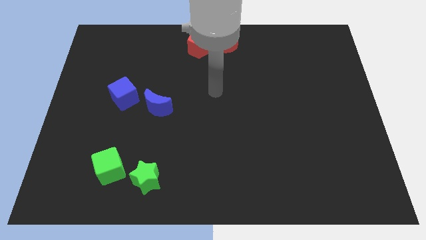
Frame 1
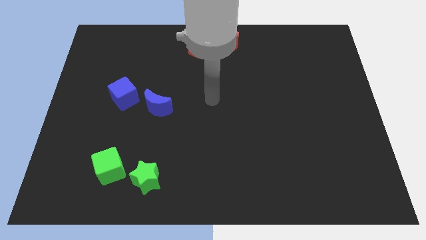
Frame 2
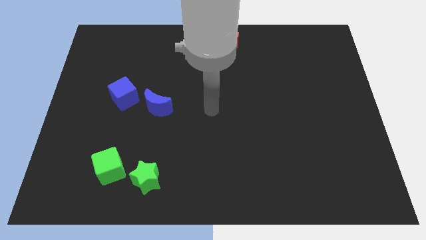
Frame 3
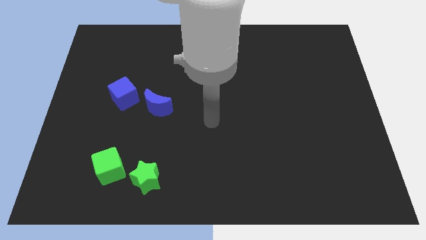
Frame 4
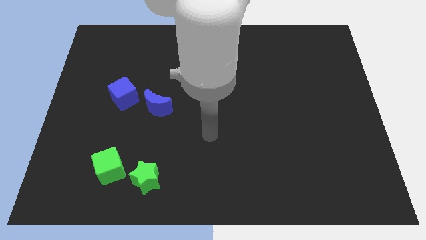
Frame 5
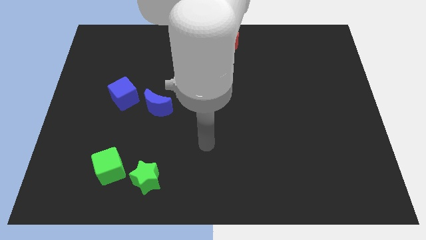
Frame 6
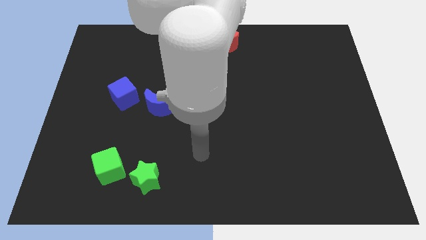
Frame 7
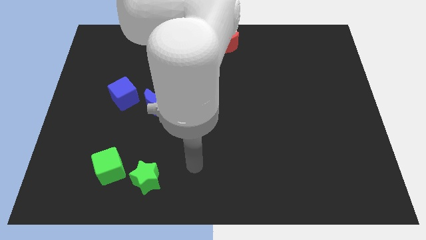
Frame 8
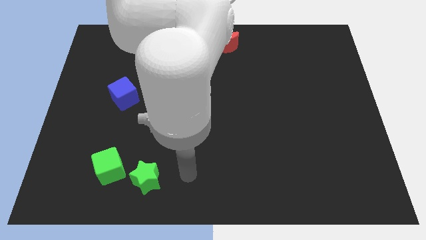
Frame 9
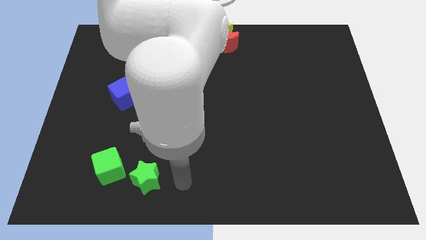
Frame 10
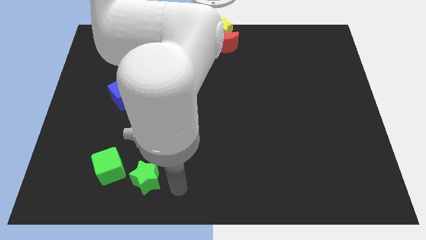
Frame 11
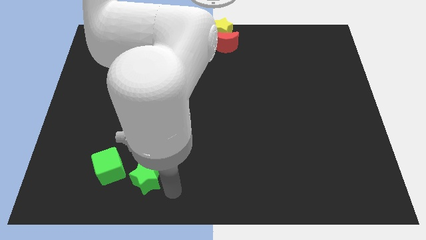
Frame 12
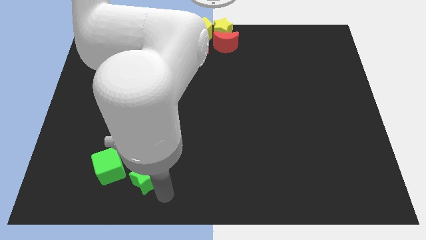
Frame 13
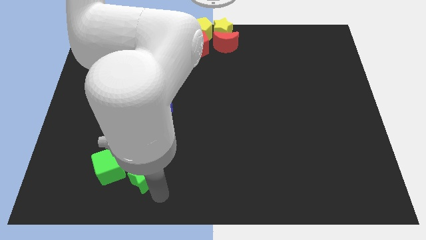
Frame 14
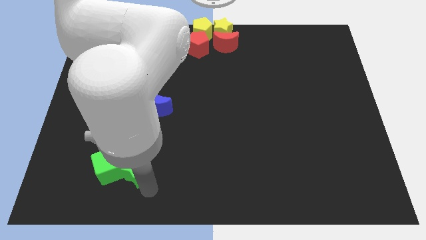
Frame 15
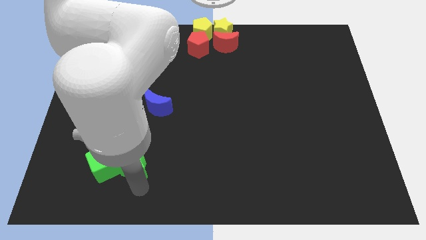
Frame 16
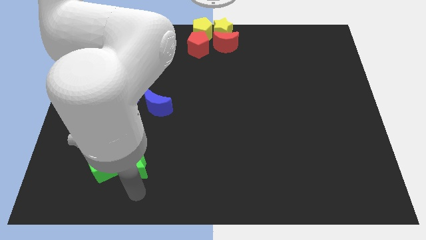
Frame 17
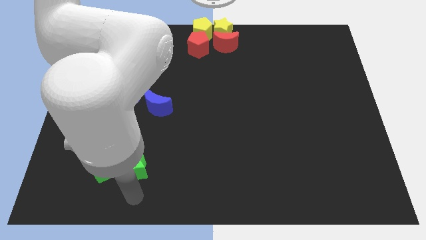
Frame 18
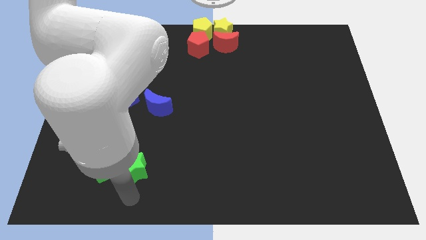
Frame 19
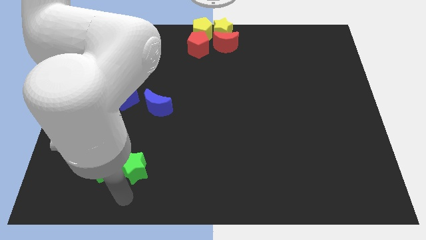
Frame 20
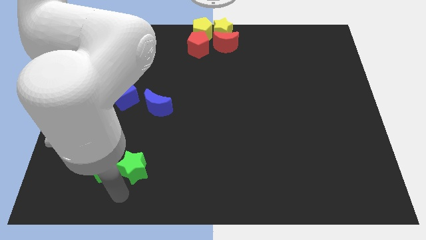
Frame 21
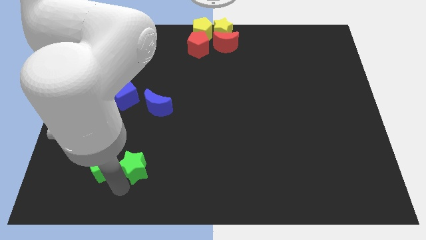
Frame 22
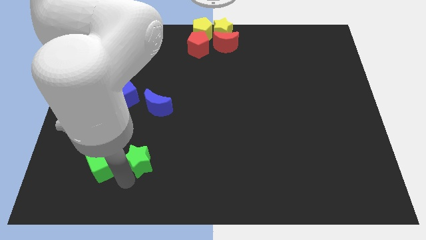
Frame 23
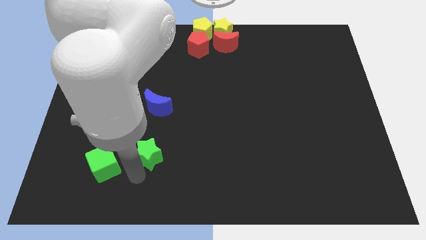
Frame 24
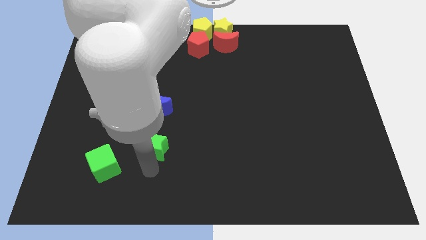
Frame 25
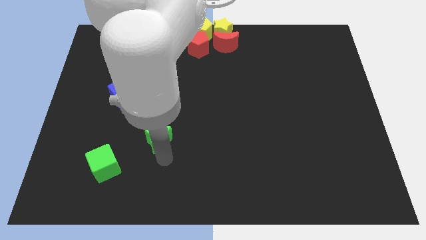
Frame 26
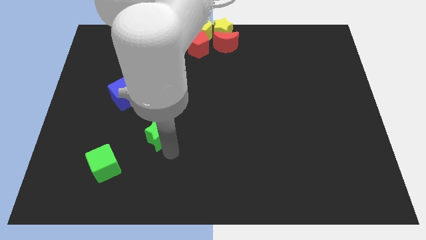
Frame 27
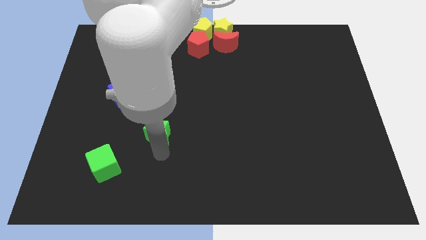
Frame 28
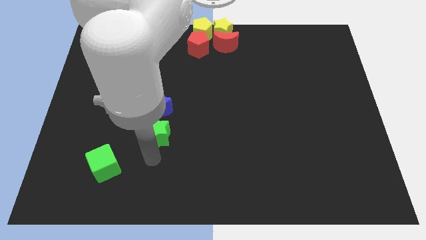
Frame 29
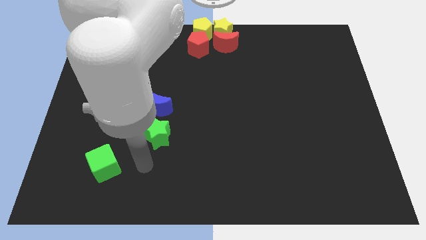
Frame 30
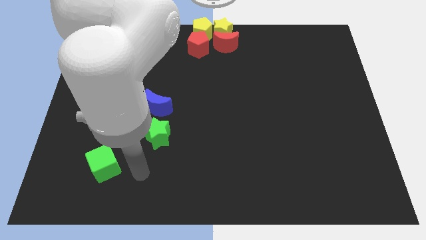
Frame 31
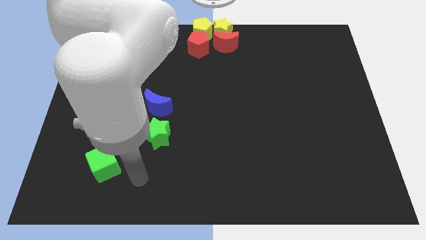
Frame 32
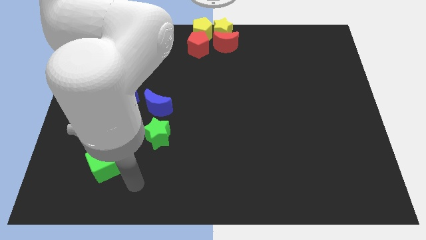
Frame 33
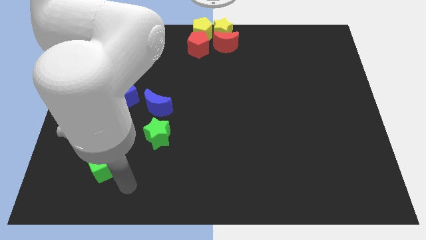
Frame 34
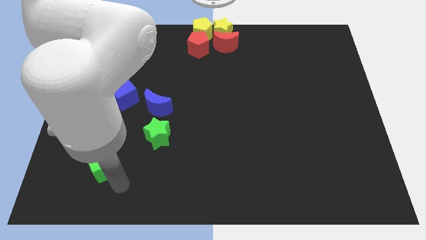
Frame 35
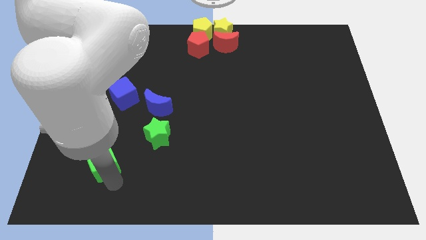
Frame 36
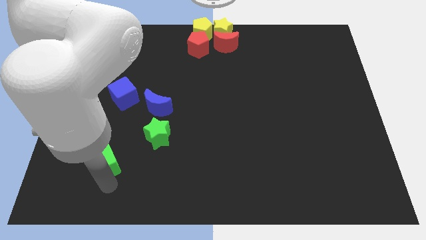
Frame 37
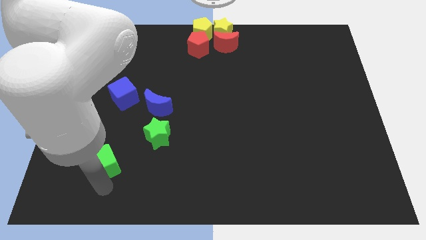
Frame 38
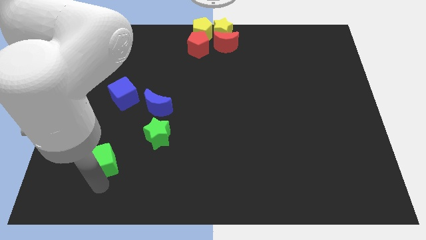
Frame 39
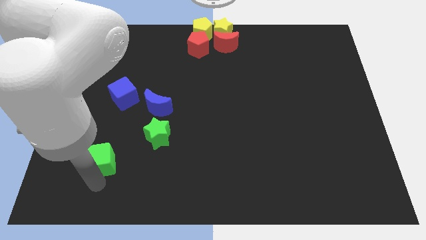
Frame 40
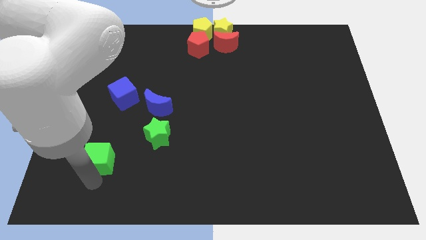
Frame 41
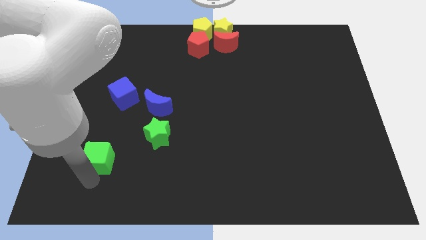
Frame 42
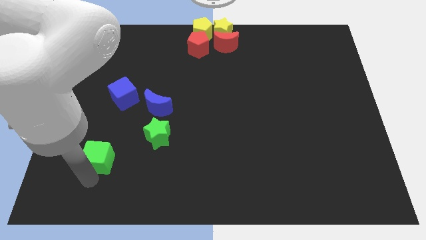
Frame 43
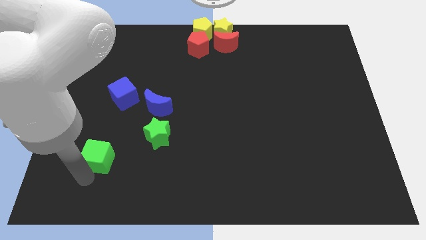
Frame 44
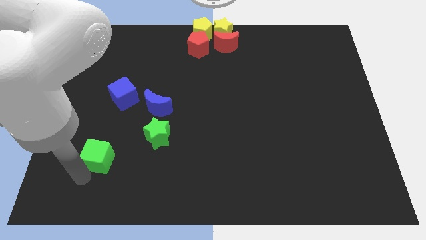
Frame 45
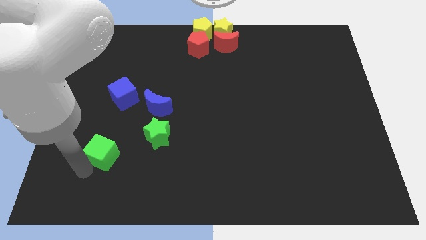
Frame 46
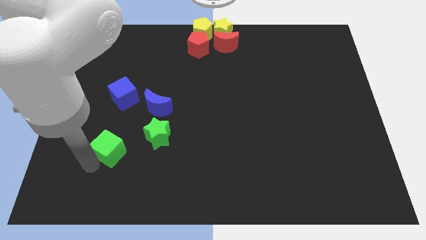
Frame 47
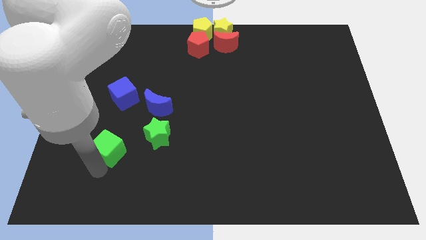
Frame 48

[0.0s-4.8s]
push green star towards blue crescent

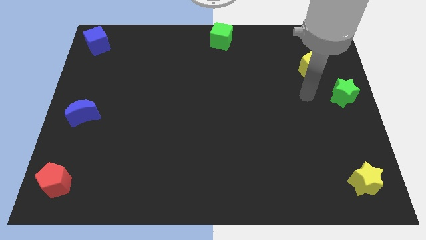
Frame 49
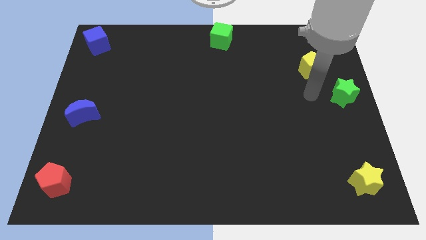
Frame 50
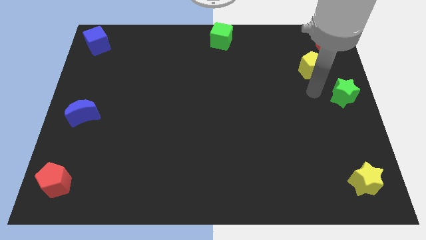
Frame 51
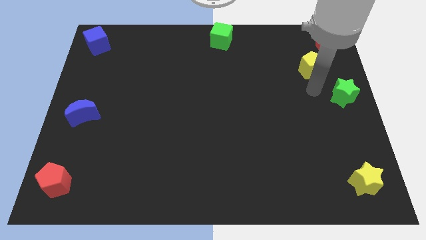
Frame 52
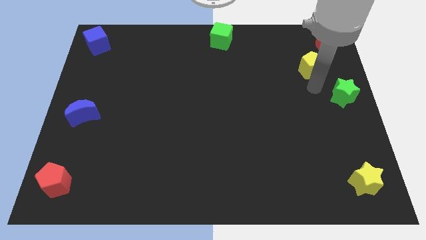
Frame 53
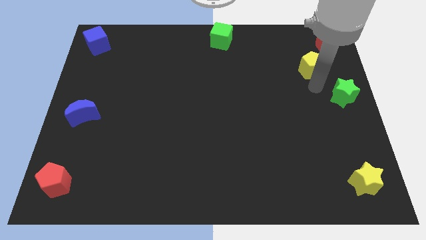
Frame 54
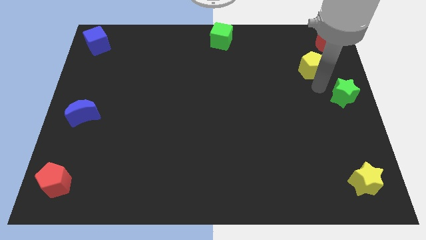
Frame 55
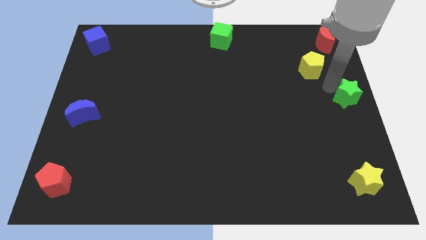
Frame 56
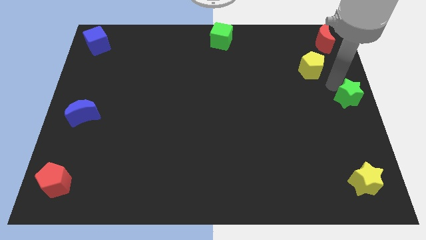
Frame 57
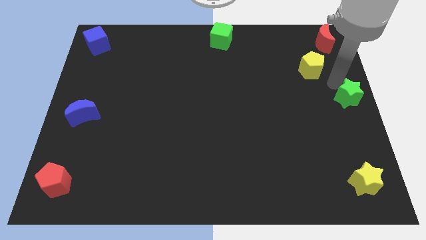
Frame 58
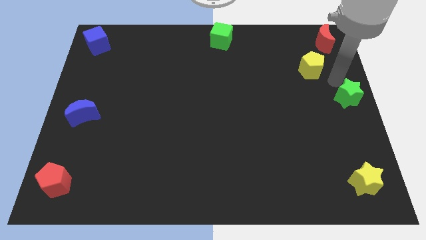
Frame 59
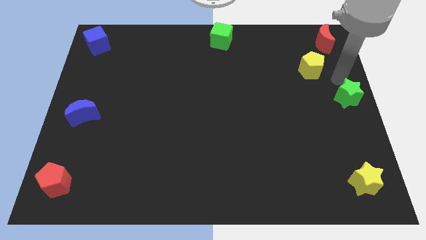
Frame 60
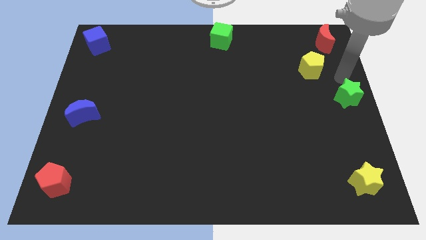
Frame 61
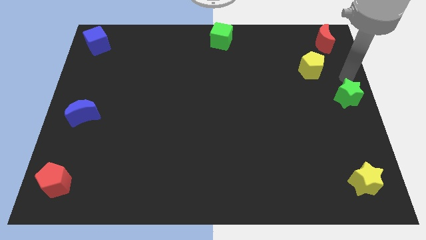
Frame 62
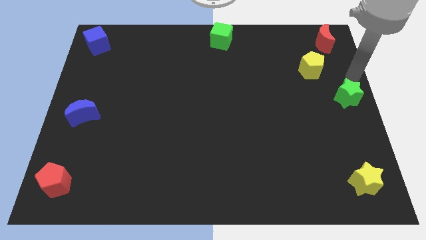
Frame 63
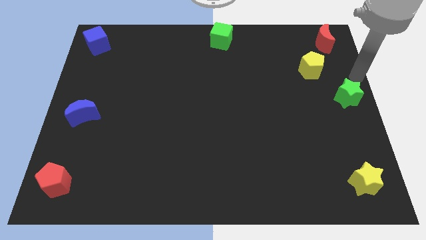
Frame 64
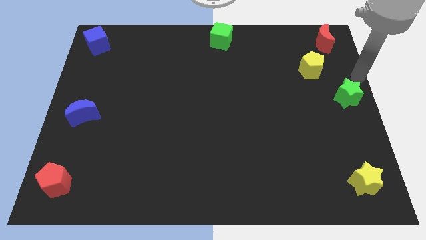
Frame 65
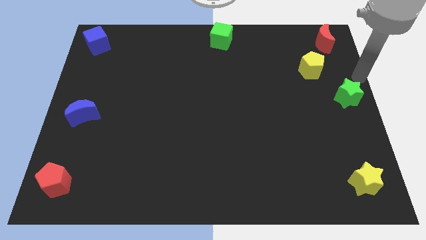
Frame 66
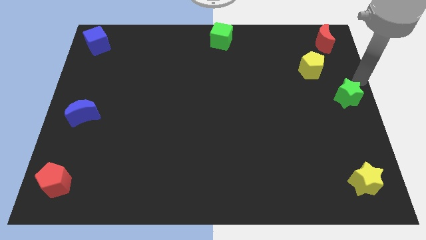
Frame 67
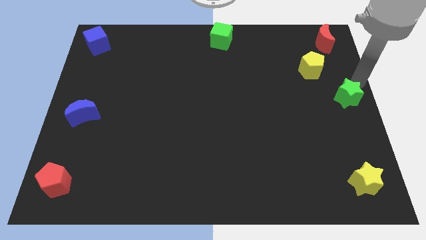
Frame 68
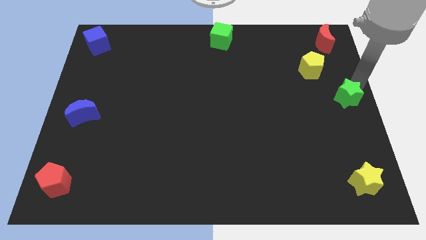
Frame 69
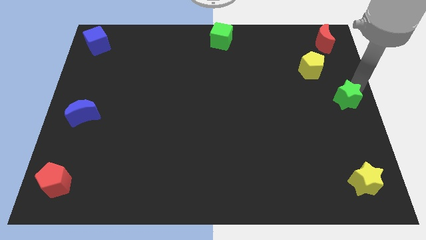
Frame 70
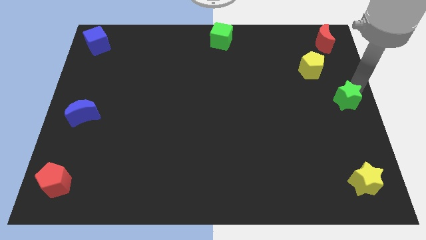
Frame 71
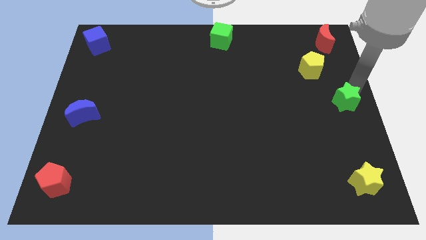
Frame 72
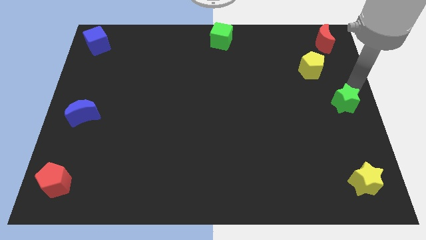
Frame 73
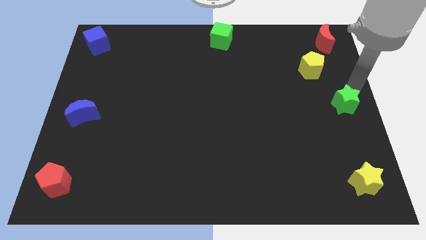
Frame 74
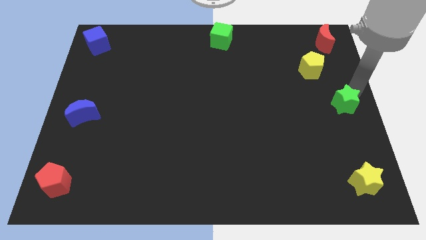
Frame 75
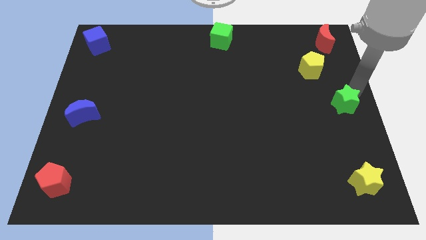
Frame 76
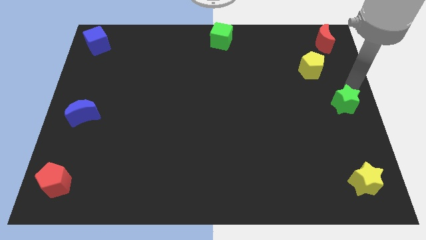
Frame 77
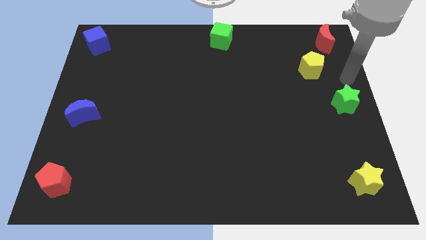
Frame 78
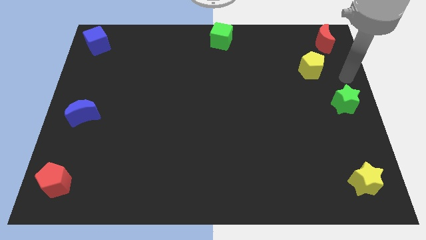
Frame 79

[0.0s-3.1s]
move the green star at the center right of the board

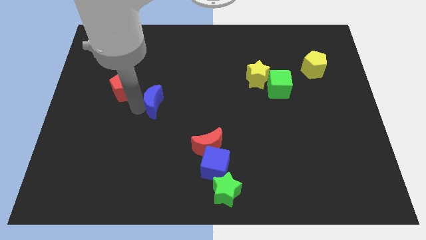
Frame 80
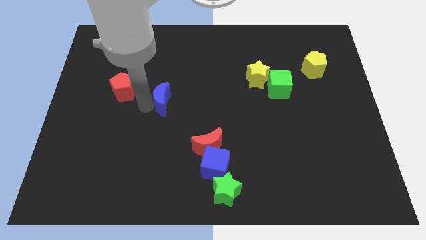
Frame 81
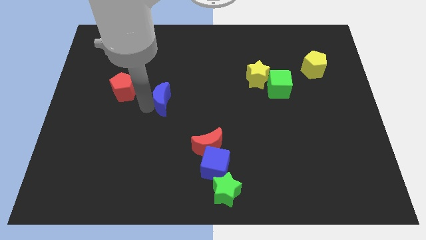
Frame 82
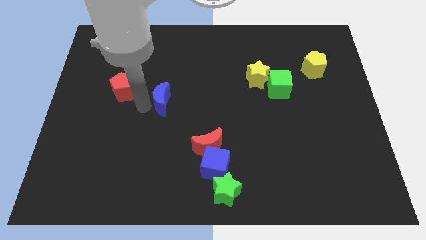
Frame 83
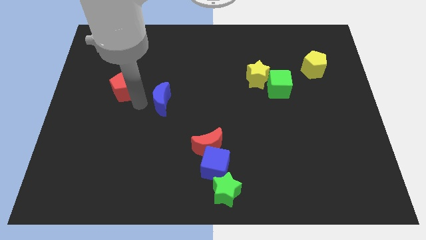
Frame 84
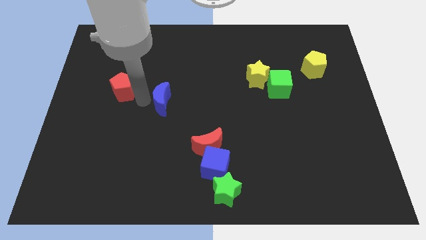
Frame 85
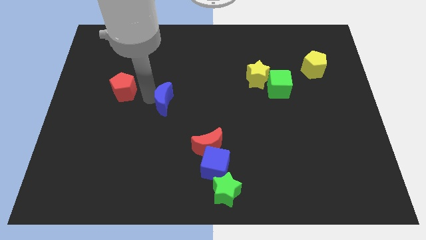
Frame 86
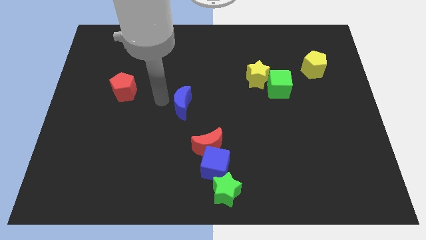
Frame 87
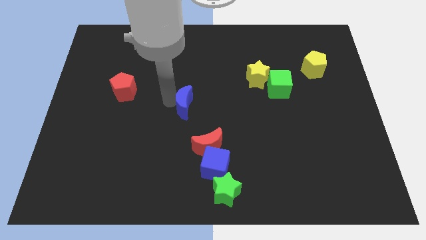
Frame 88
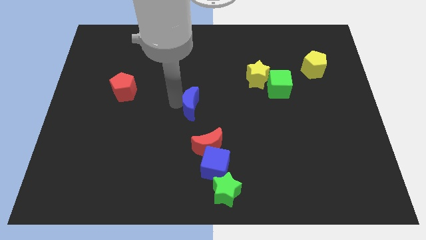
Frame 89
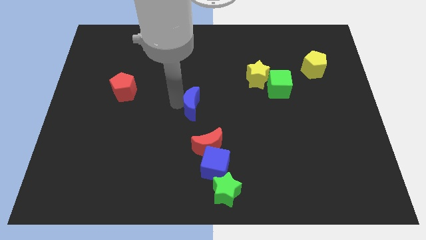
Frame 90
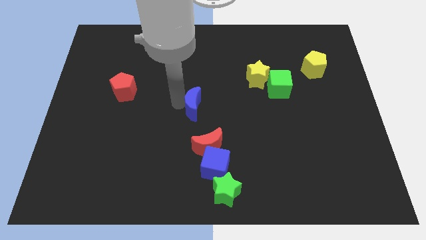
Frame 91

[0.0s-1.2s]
push the blue crescent to the center of the board
